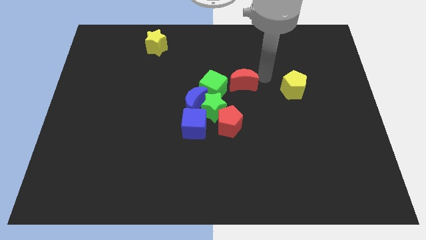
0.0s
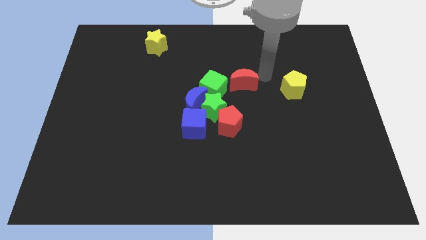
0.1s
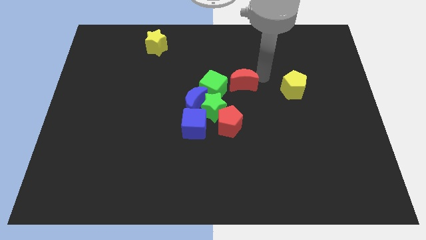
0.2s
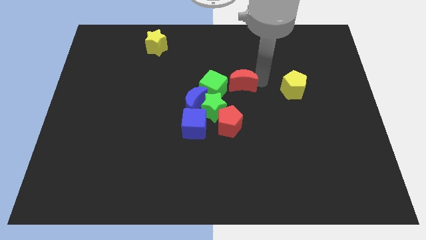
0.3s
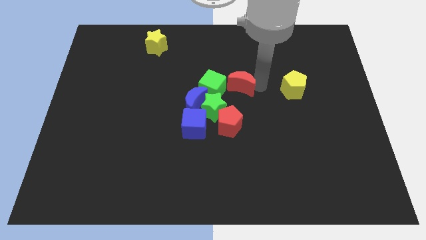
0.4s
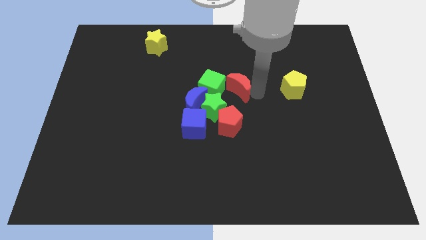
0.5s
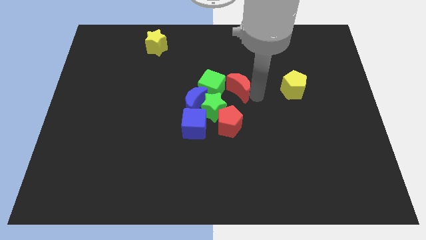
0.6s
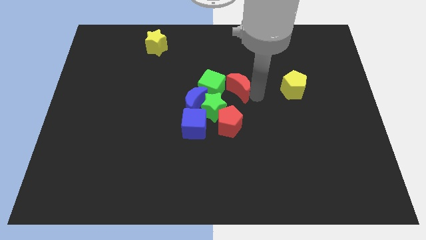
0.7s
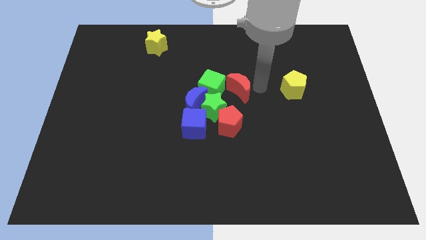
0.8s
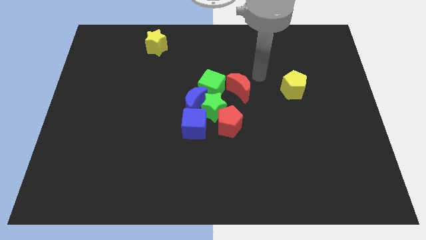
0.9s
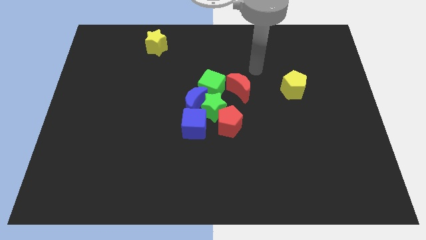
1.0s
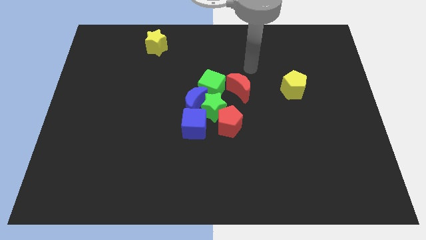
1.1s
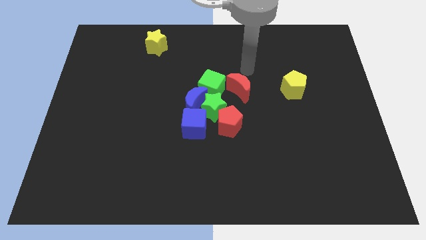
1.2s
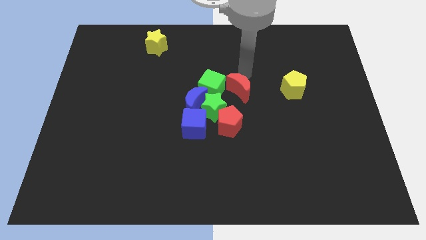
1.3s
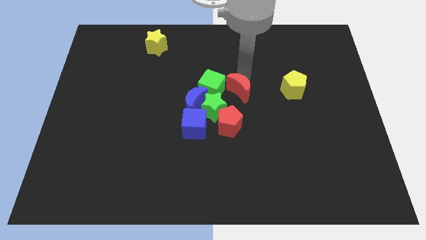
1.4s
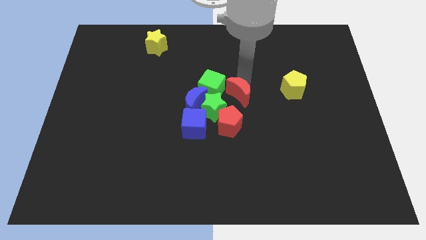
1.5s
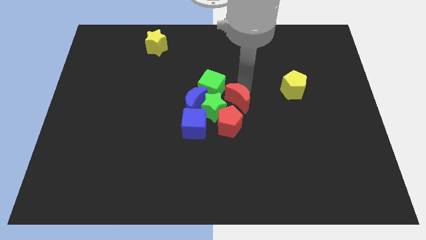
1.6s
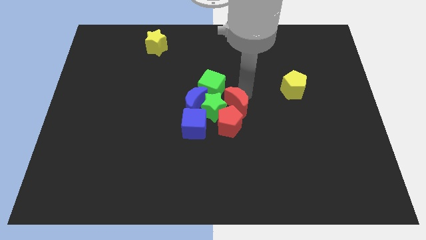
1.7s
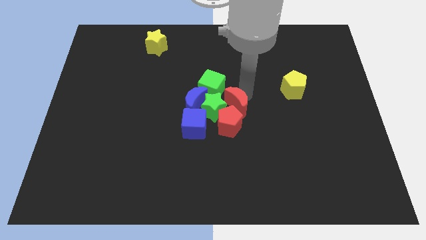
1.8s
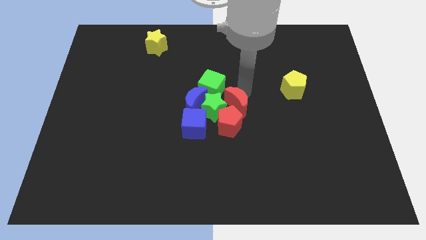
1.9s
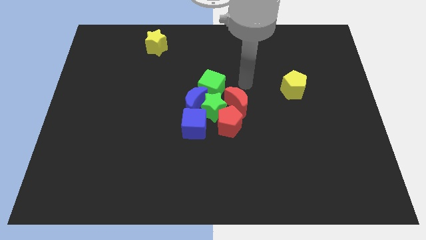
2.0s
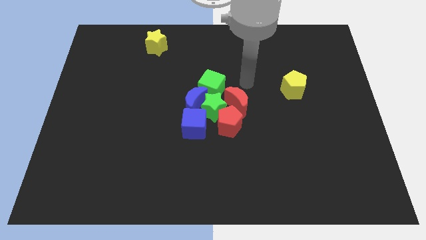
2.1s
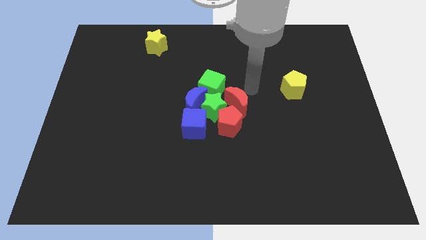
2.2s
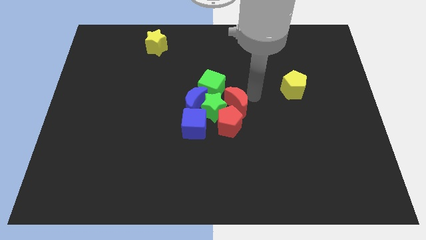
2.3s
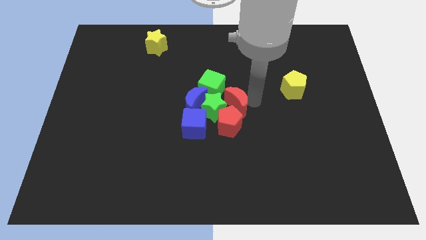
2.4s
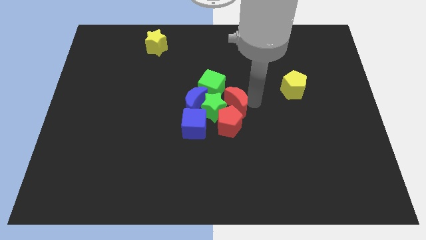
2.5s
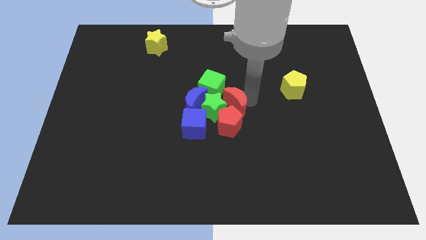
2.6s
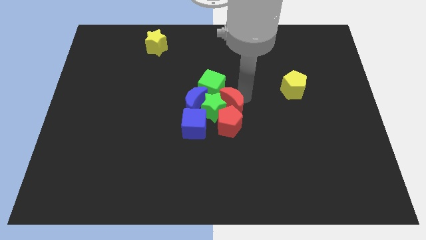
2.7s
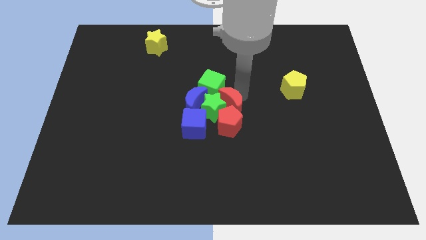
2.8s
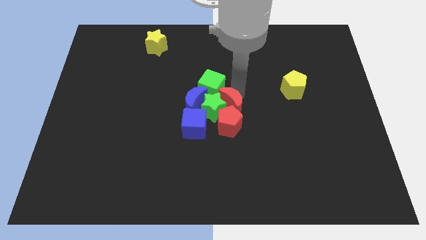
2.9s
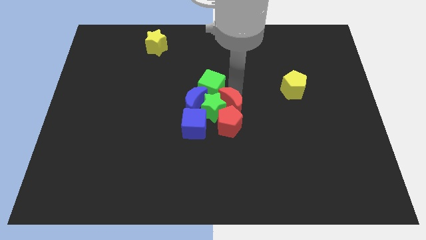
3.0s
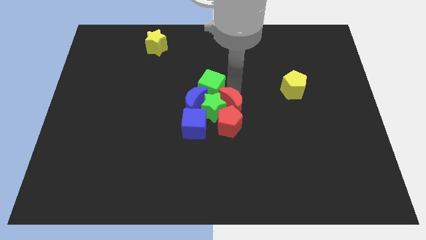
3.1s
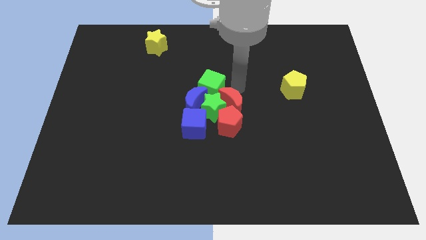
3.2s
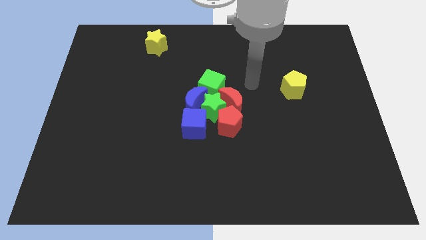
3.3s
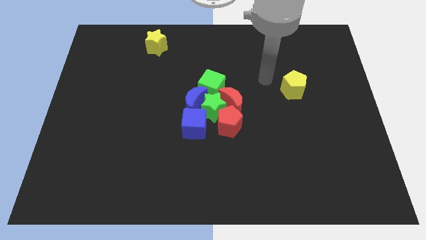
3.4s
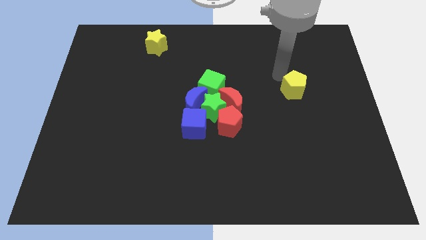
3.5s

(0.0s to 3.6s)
move the red moon above the red pentagon

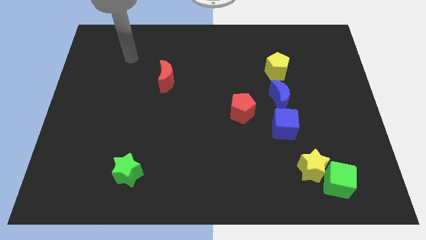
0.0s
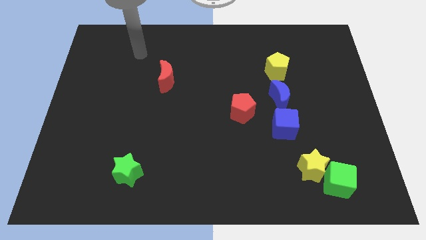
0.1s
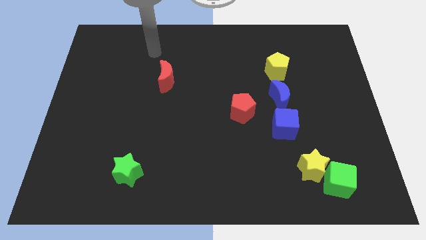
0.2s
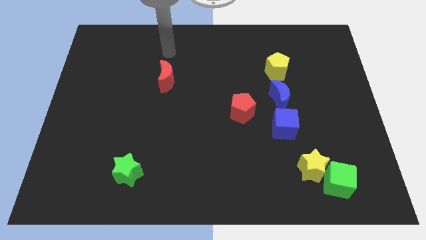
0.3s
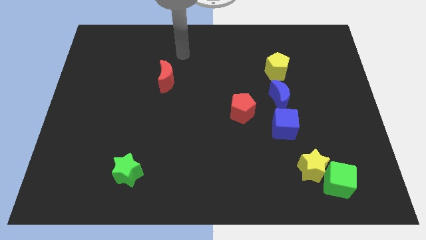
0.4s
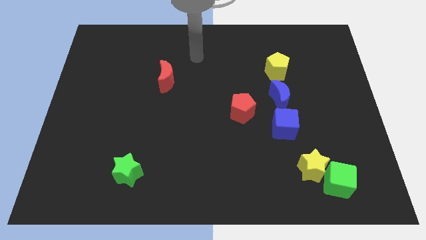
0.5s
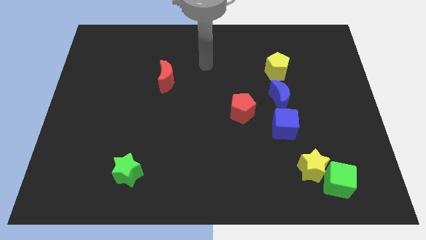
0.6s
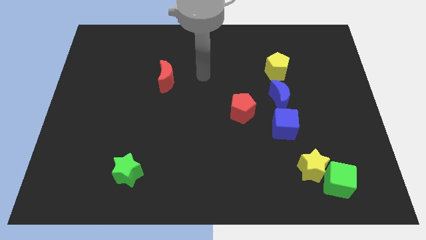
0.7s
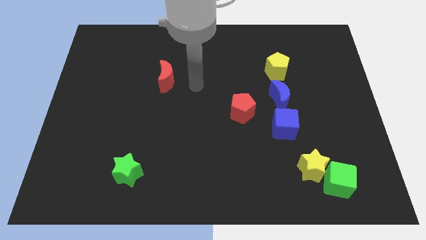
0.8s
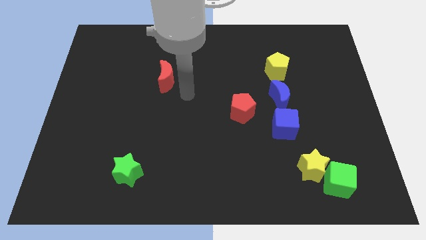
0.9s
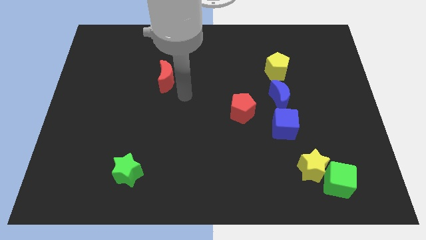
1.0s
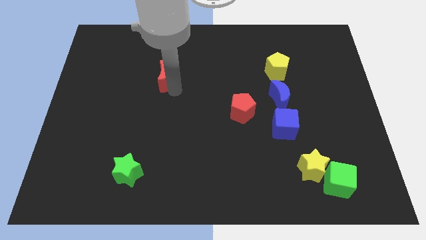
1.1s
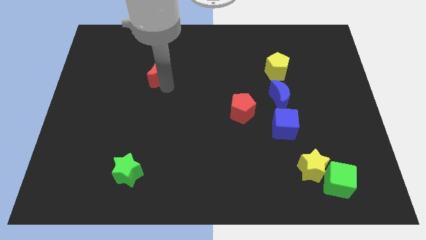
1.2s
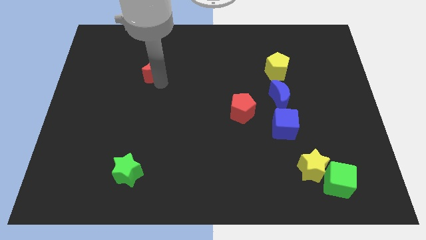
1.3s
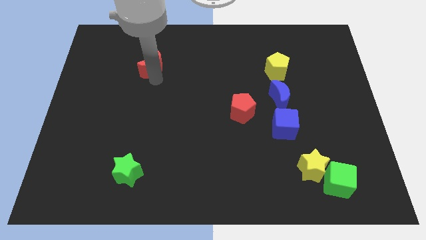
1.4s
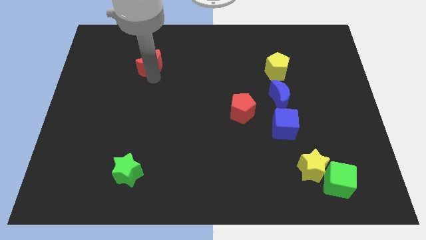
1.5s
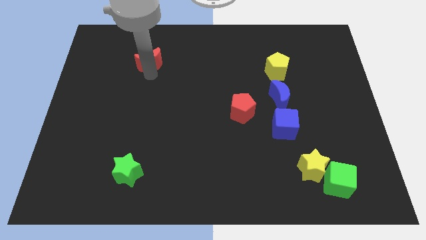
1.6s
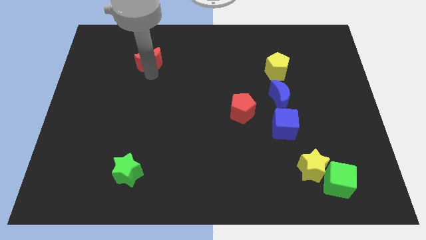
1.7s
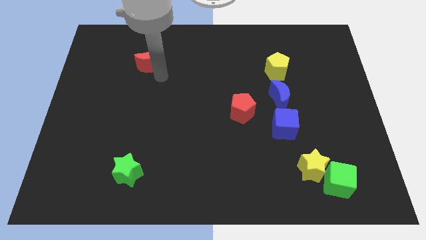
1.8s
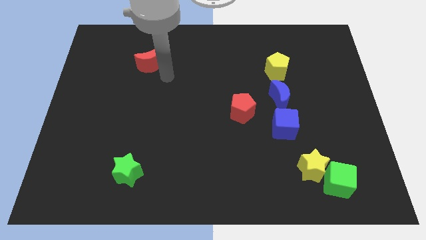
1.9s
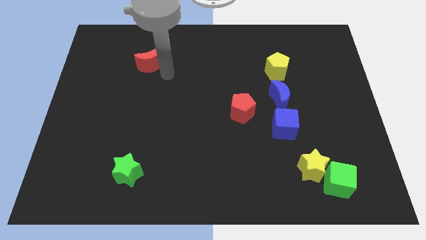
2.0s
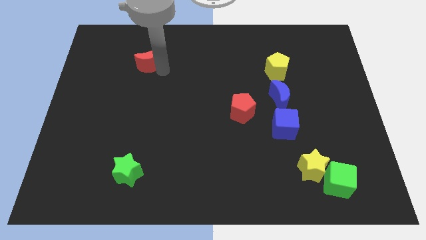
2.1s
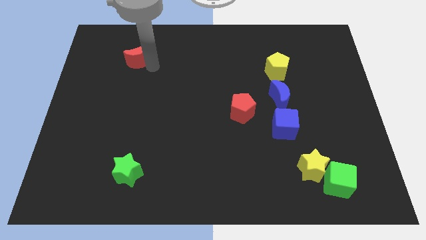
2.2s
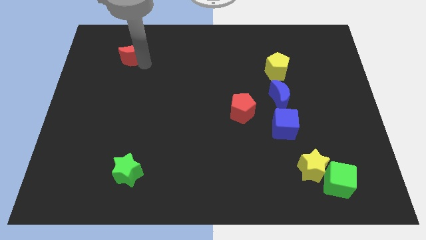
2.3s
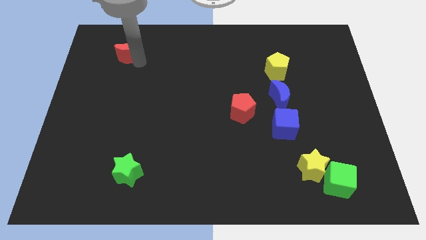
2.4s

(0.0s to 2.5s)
place the red crescent vertically above the green star

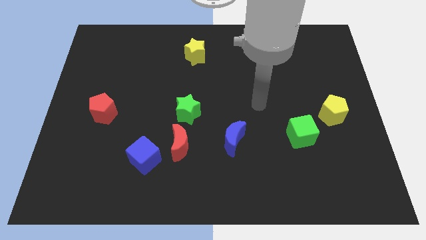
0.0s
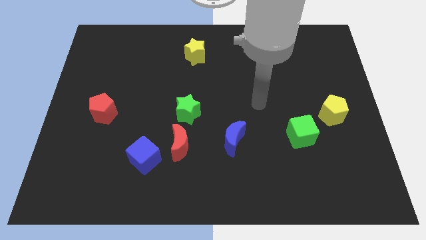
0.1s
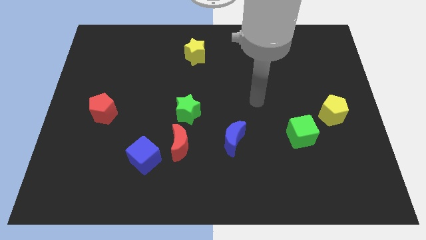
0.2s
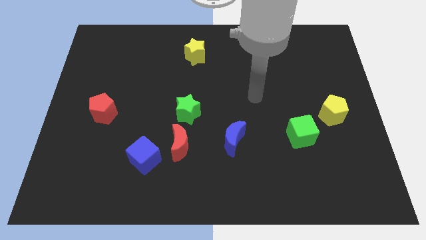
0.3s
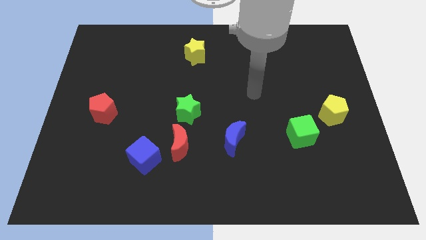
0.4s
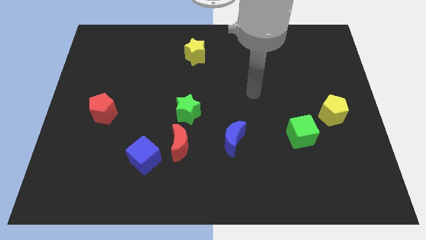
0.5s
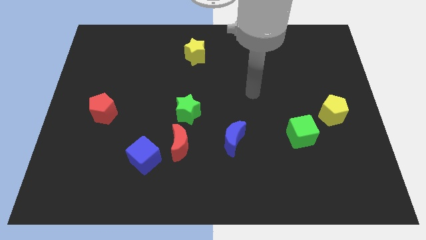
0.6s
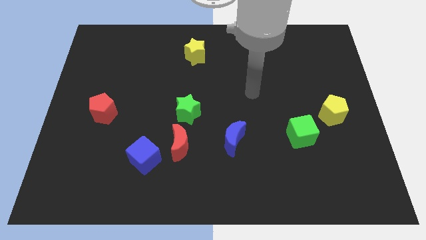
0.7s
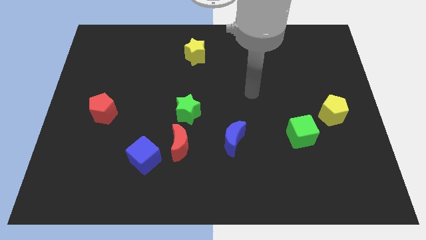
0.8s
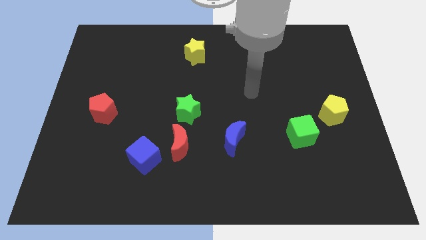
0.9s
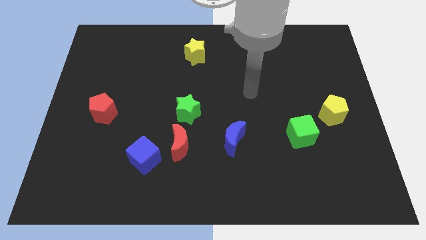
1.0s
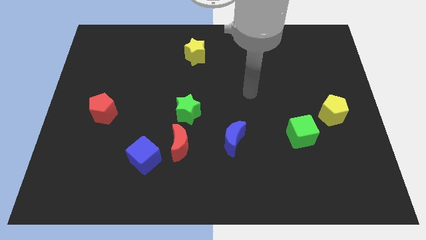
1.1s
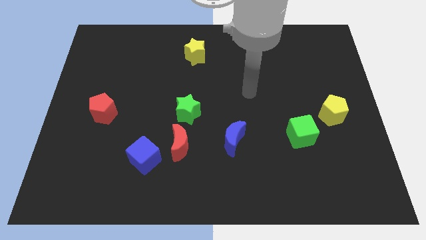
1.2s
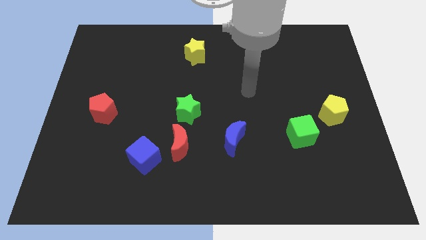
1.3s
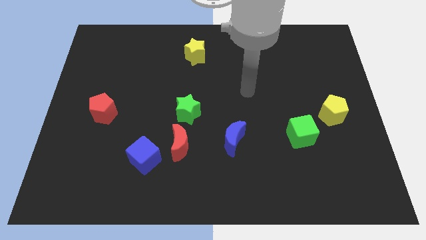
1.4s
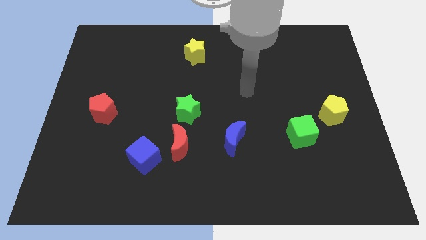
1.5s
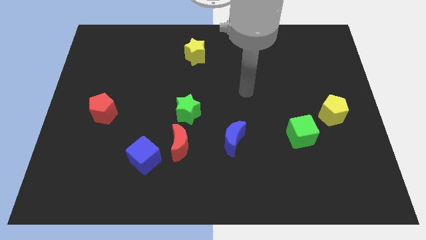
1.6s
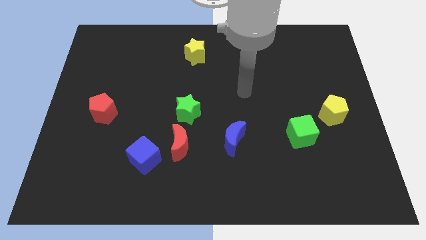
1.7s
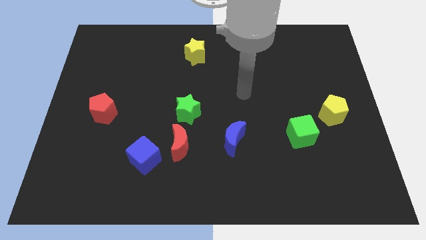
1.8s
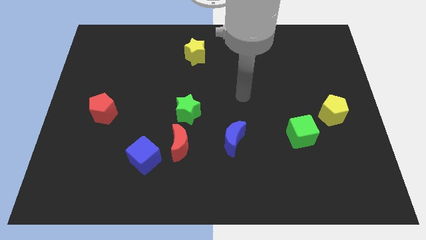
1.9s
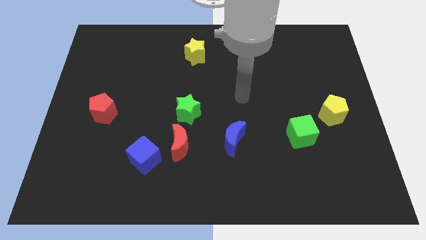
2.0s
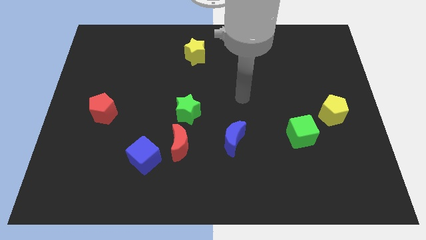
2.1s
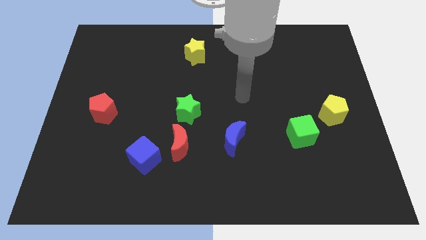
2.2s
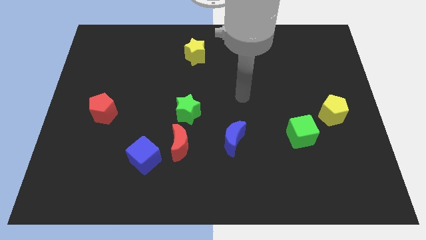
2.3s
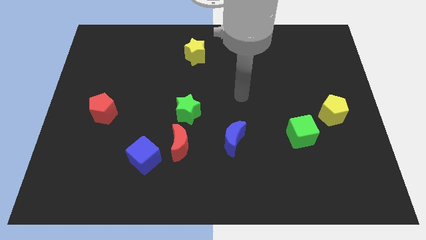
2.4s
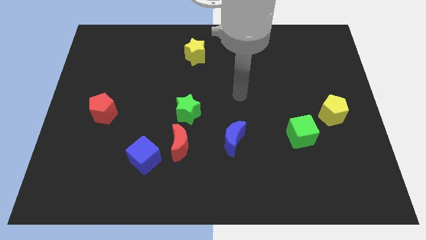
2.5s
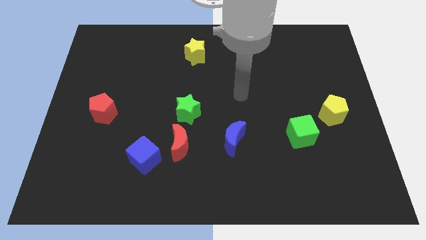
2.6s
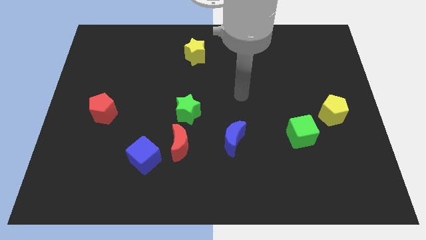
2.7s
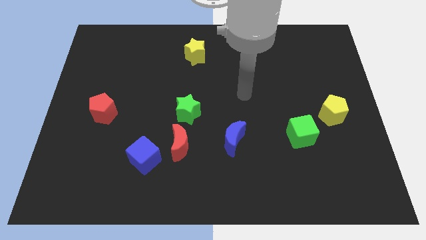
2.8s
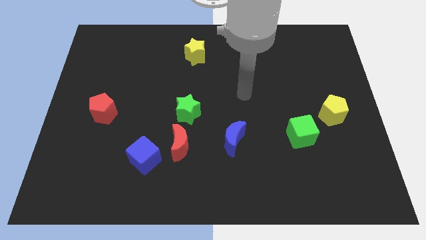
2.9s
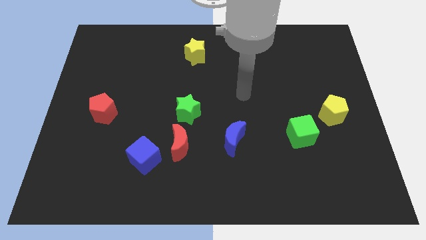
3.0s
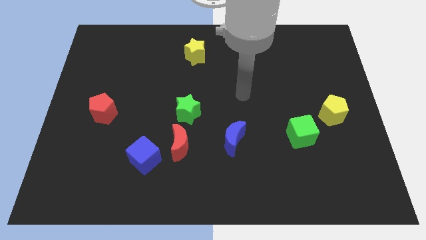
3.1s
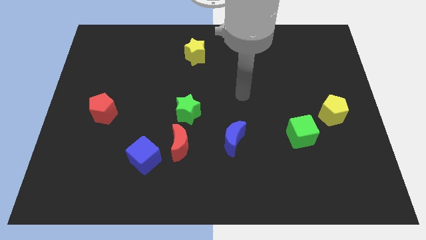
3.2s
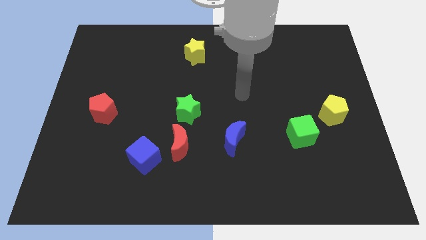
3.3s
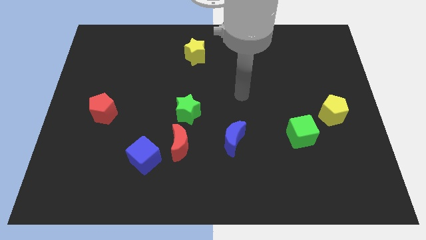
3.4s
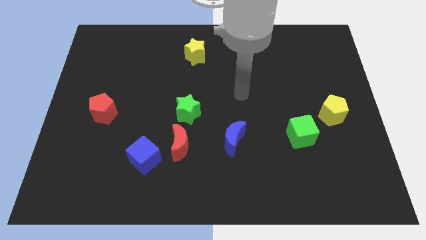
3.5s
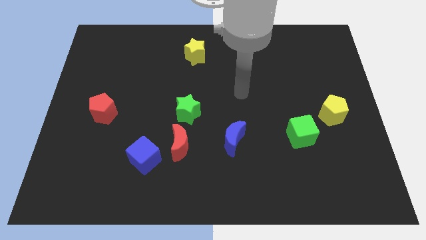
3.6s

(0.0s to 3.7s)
move the arm vertically
